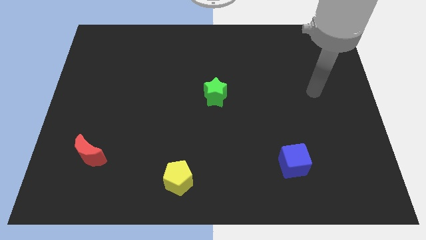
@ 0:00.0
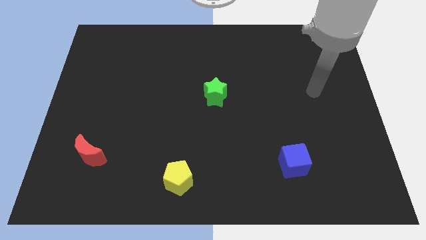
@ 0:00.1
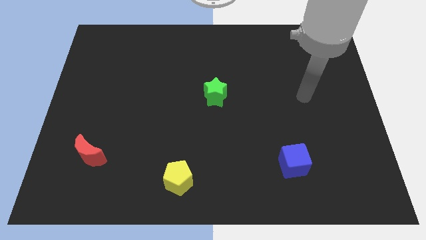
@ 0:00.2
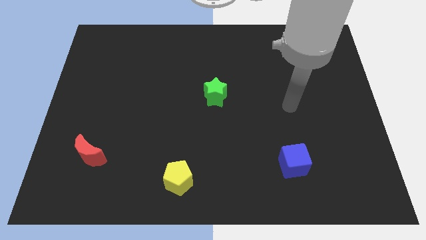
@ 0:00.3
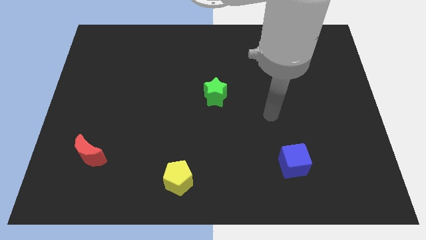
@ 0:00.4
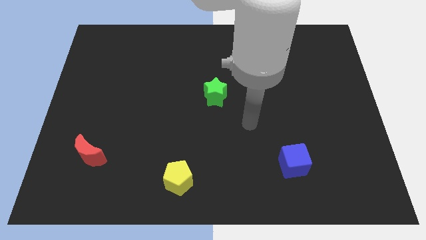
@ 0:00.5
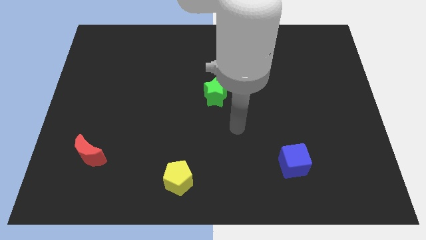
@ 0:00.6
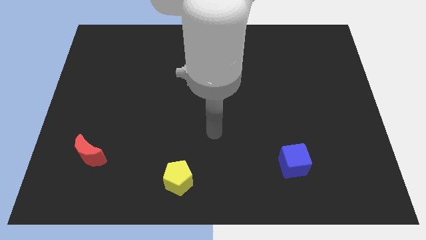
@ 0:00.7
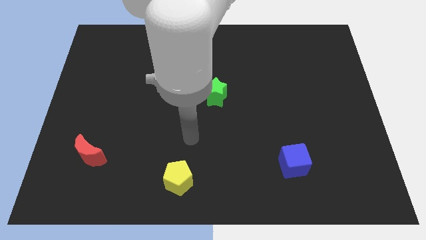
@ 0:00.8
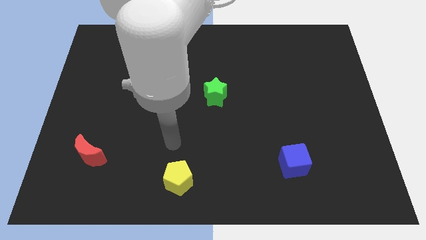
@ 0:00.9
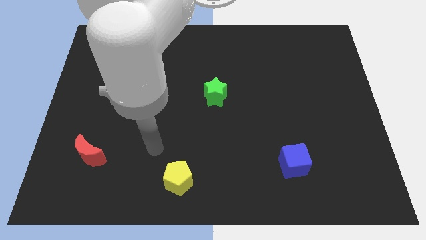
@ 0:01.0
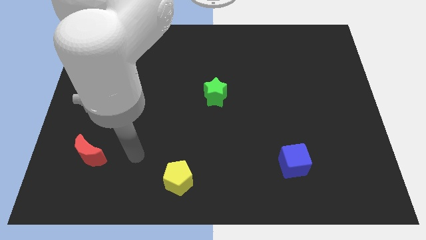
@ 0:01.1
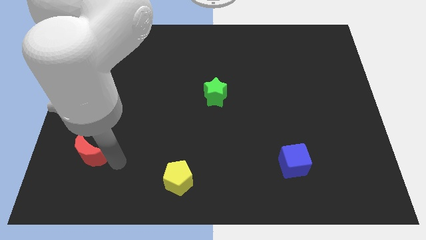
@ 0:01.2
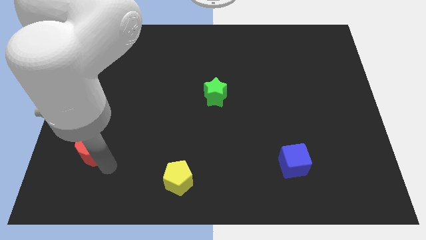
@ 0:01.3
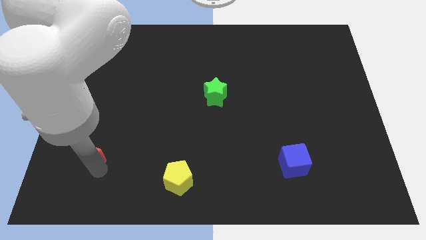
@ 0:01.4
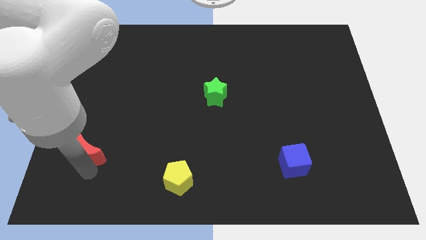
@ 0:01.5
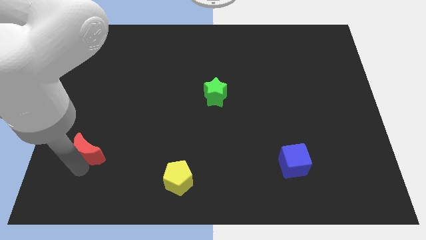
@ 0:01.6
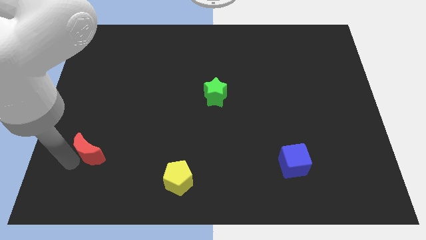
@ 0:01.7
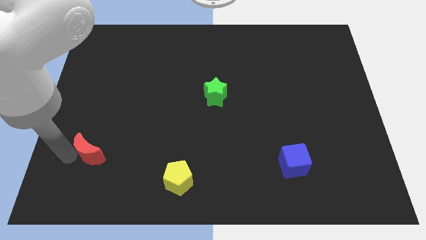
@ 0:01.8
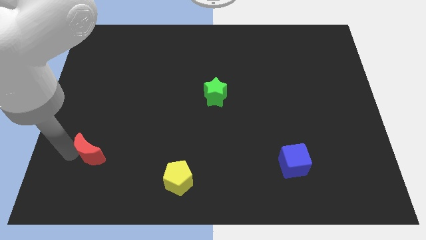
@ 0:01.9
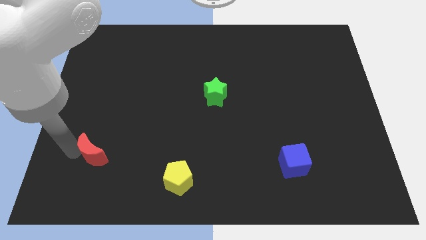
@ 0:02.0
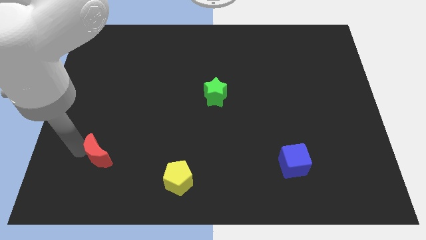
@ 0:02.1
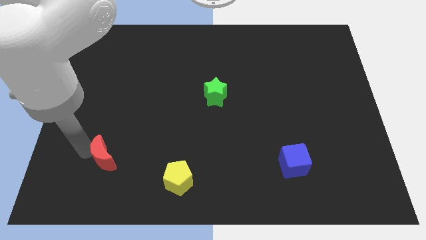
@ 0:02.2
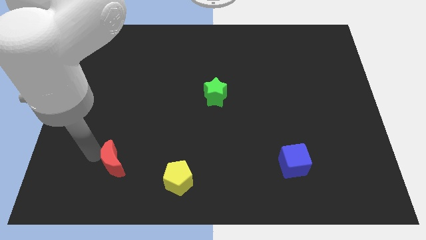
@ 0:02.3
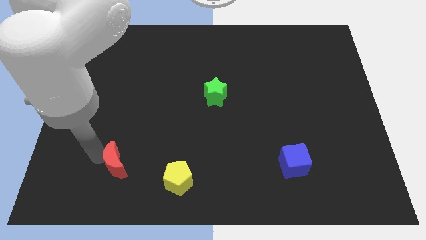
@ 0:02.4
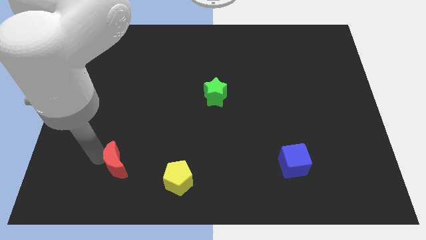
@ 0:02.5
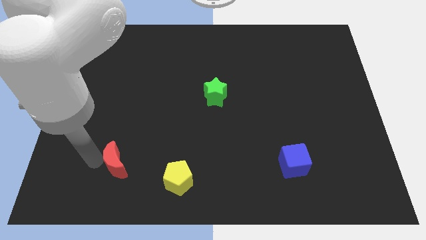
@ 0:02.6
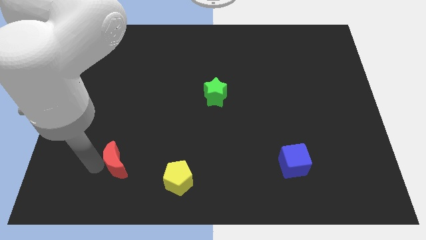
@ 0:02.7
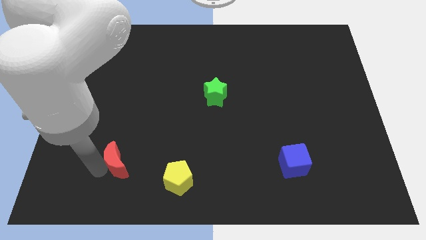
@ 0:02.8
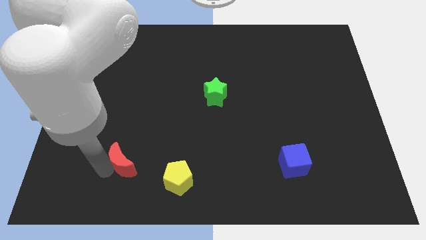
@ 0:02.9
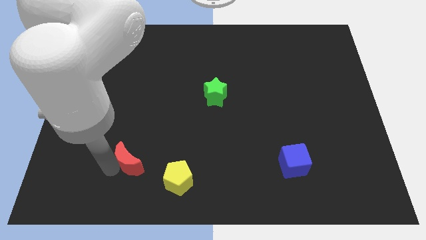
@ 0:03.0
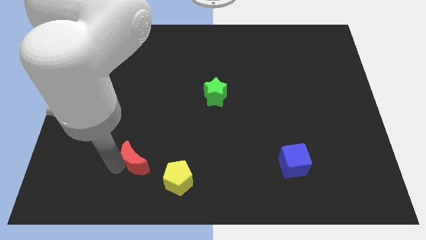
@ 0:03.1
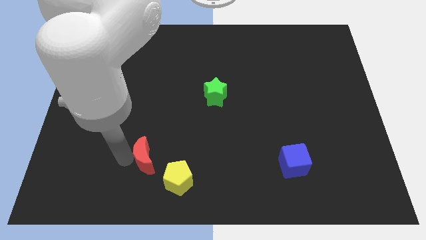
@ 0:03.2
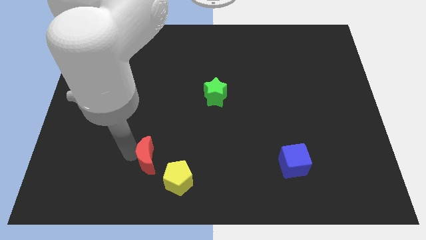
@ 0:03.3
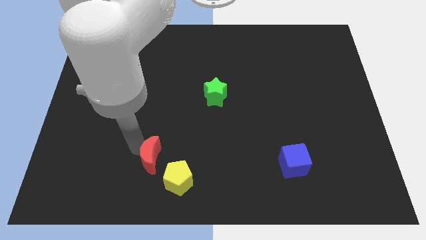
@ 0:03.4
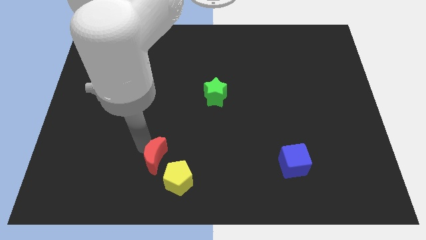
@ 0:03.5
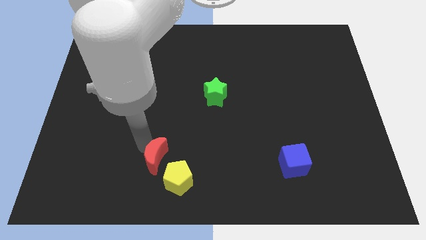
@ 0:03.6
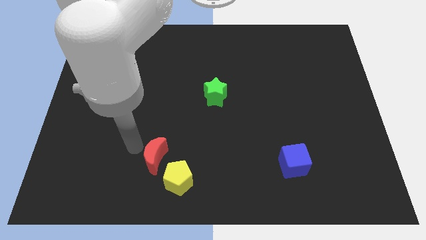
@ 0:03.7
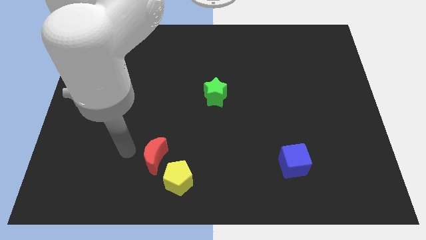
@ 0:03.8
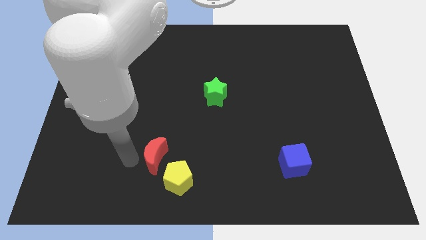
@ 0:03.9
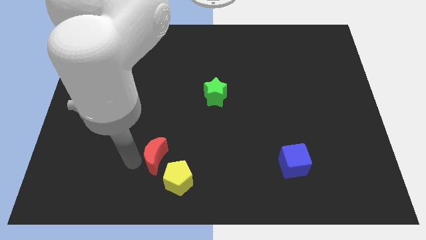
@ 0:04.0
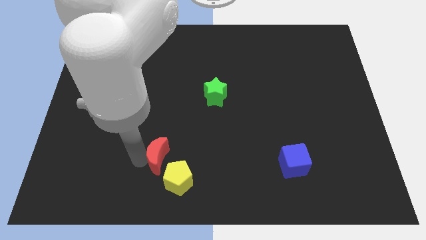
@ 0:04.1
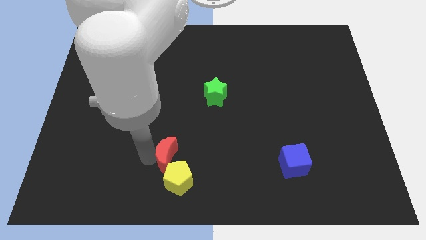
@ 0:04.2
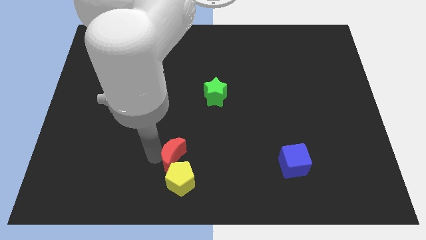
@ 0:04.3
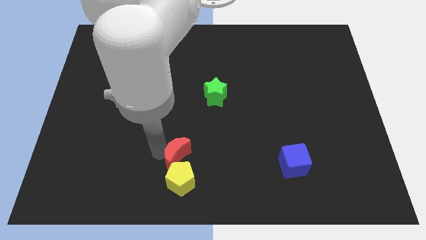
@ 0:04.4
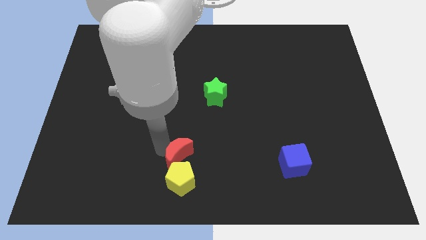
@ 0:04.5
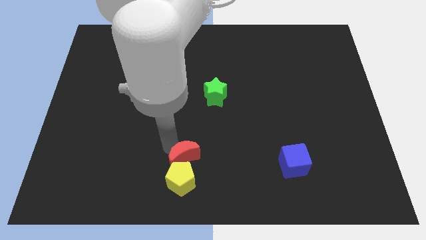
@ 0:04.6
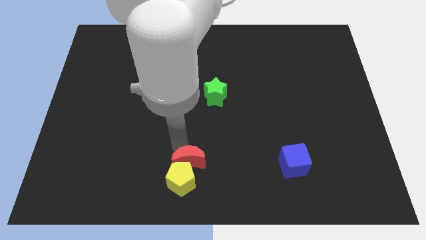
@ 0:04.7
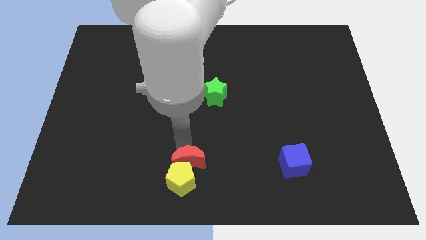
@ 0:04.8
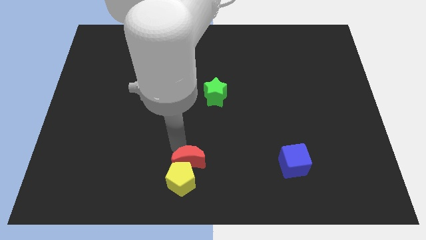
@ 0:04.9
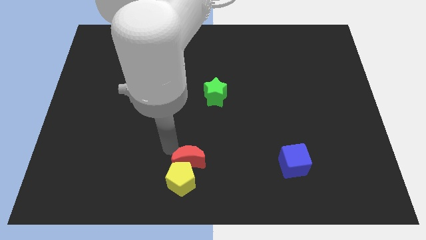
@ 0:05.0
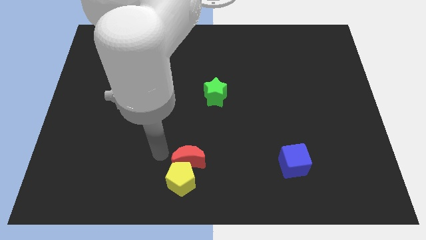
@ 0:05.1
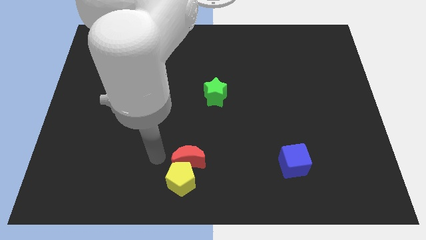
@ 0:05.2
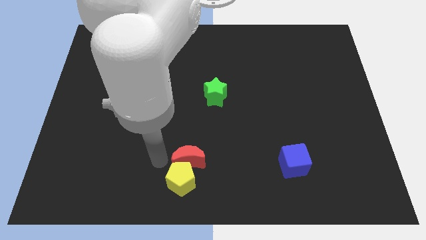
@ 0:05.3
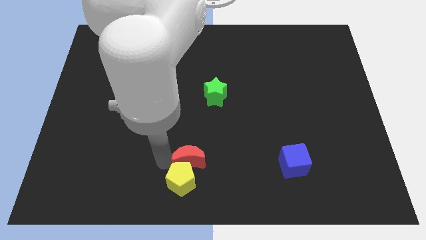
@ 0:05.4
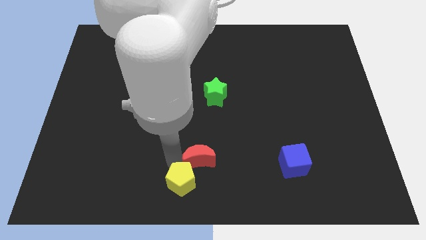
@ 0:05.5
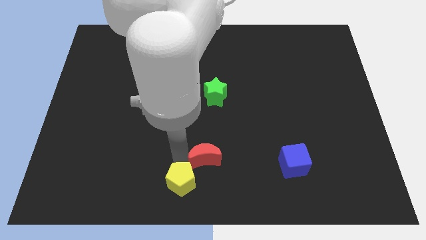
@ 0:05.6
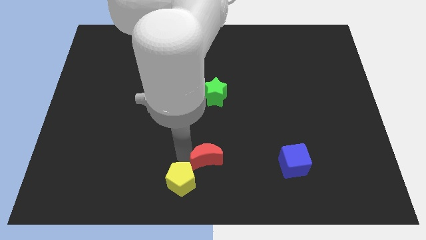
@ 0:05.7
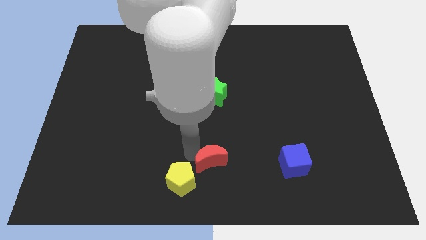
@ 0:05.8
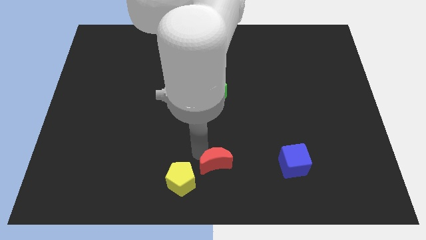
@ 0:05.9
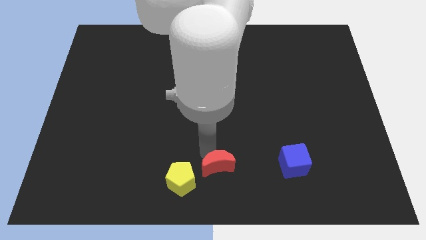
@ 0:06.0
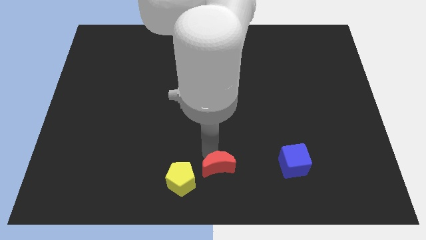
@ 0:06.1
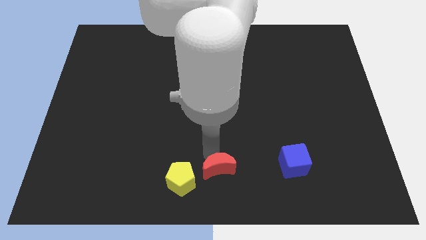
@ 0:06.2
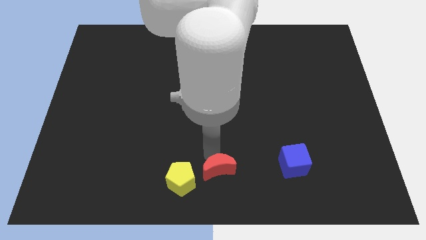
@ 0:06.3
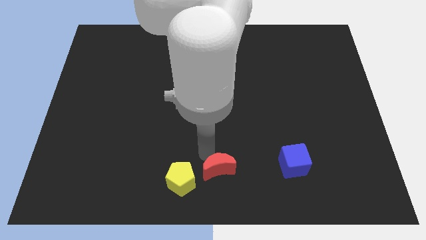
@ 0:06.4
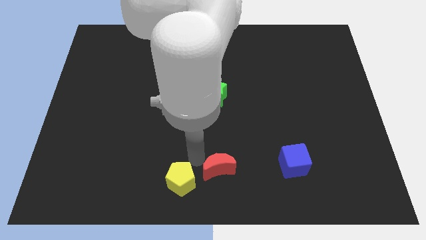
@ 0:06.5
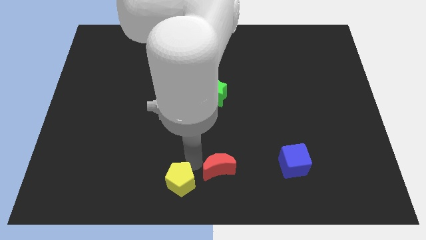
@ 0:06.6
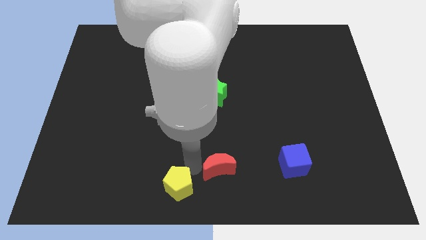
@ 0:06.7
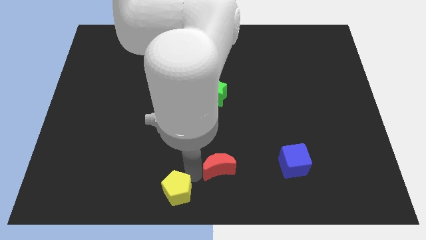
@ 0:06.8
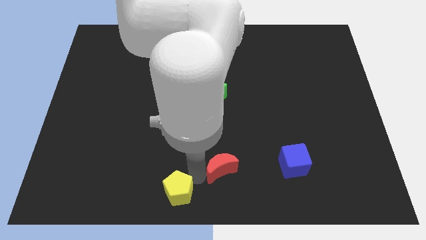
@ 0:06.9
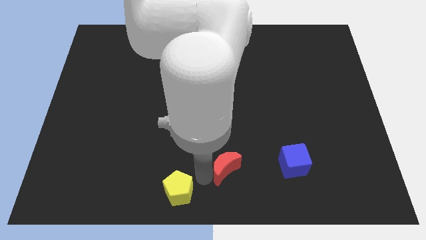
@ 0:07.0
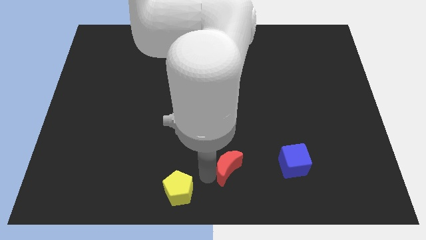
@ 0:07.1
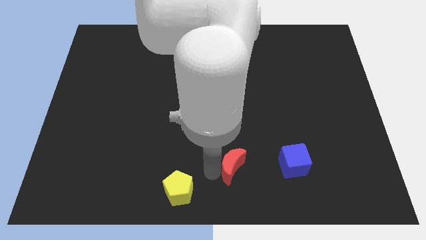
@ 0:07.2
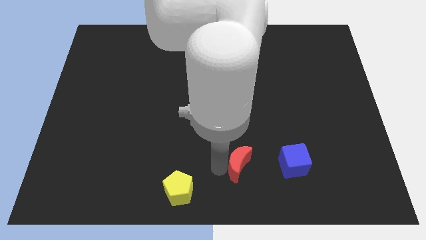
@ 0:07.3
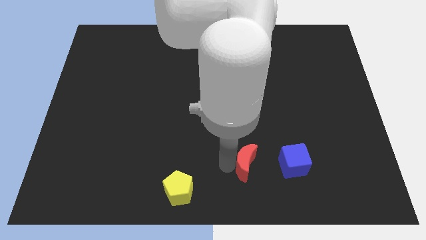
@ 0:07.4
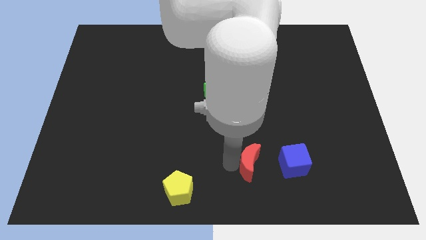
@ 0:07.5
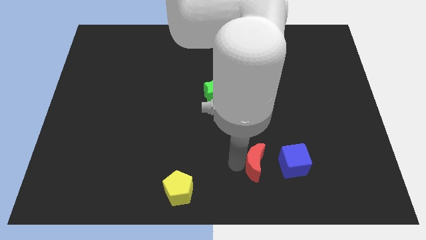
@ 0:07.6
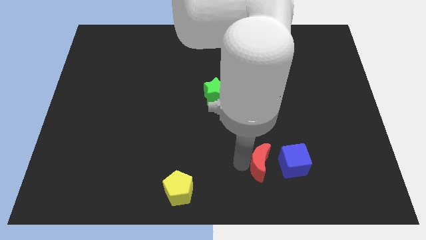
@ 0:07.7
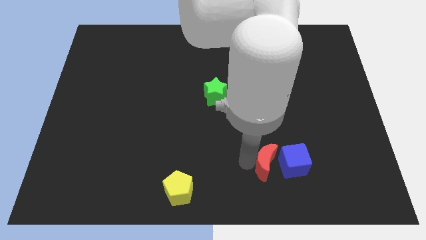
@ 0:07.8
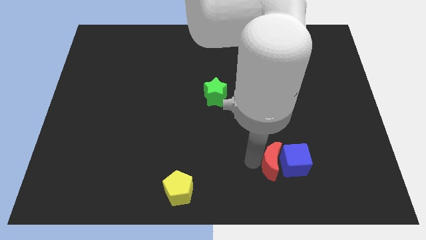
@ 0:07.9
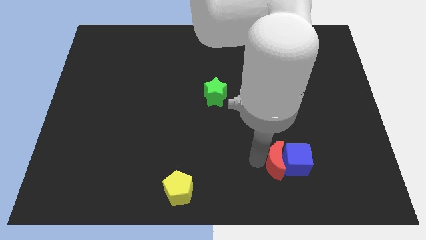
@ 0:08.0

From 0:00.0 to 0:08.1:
slide the red moon close to the blue cube

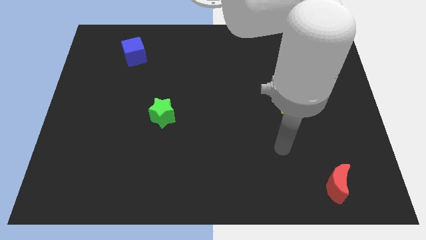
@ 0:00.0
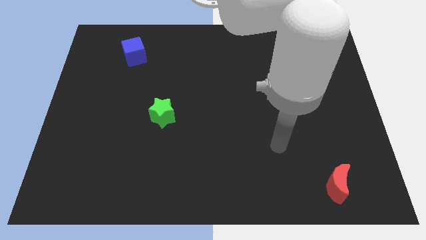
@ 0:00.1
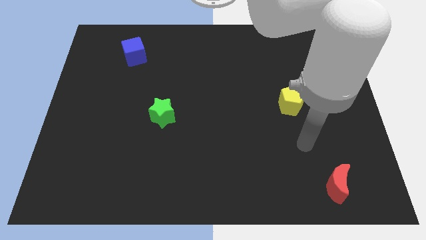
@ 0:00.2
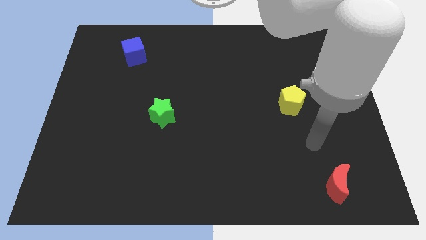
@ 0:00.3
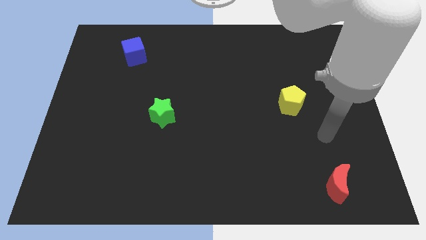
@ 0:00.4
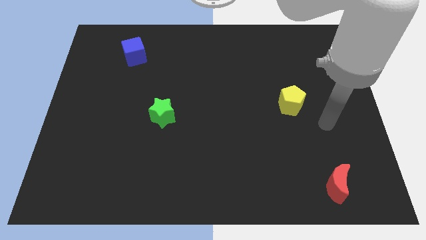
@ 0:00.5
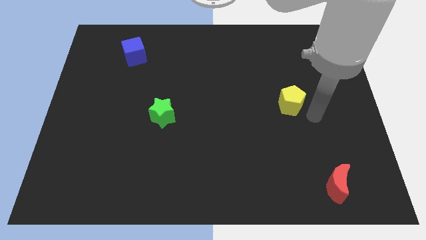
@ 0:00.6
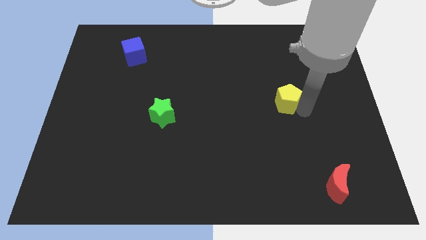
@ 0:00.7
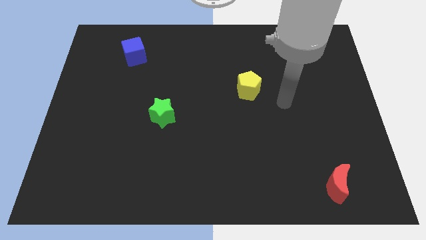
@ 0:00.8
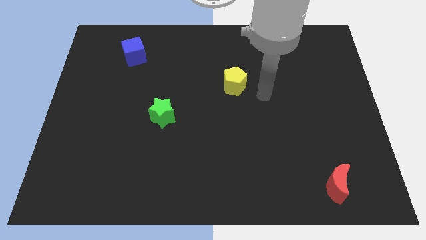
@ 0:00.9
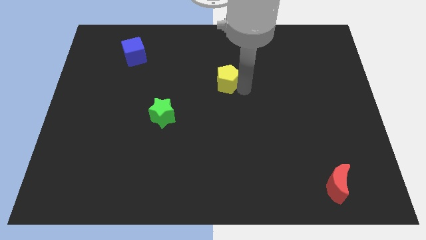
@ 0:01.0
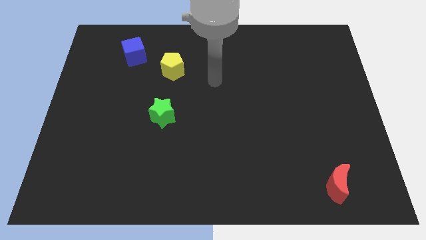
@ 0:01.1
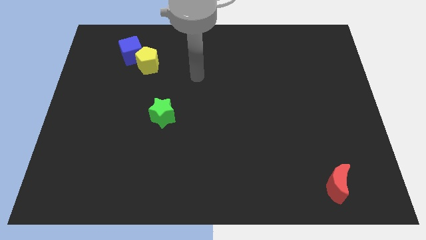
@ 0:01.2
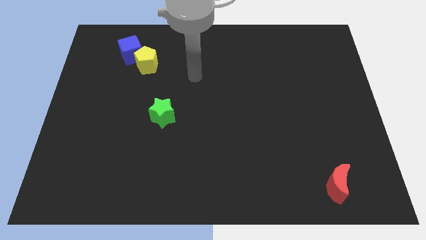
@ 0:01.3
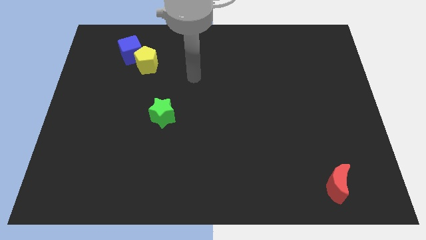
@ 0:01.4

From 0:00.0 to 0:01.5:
slide the yellow block close to the cube
